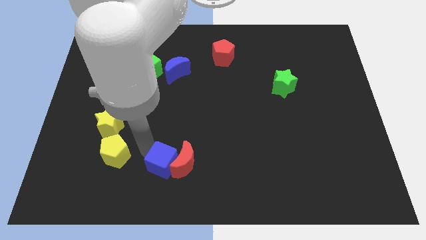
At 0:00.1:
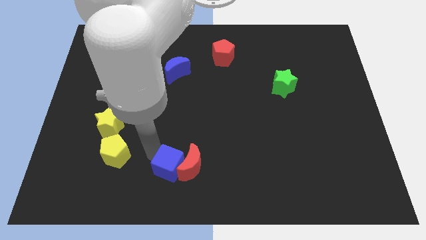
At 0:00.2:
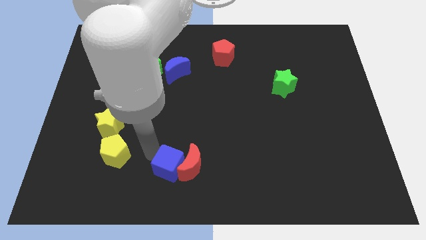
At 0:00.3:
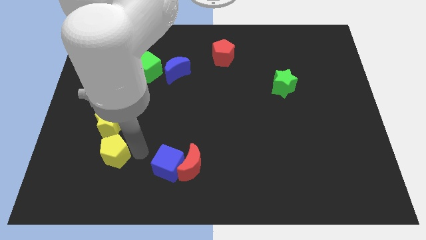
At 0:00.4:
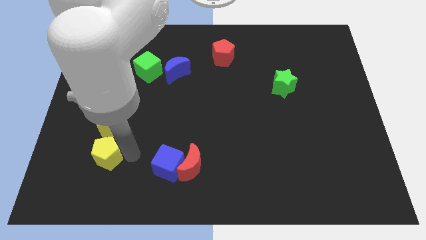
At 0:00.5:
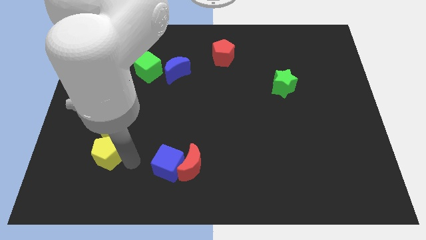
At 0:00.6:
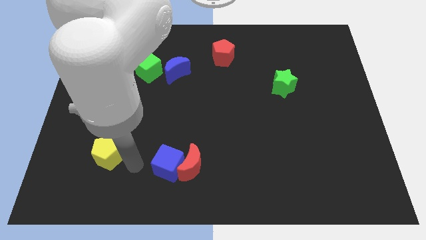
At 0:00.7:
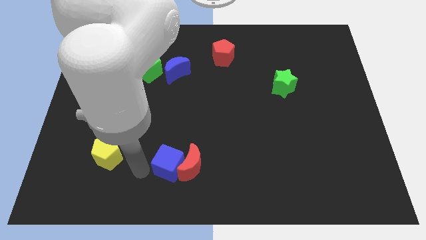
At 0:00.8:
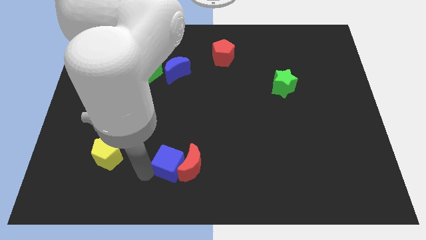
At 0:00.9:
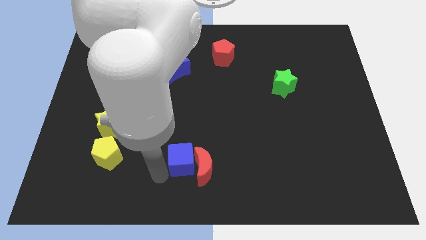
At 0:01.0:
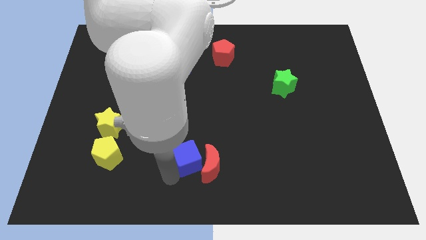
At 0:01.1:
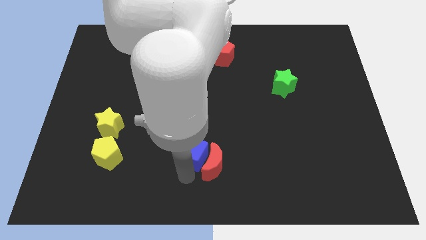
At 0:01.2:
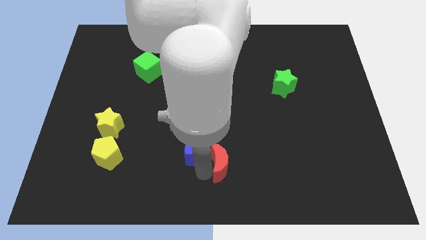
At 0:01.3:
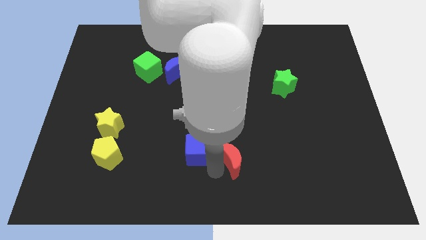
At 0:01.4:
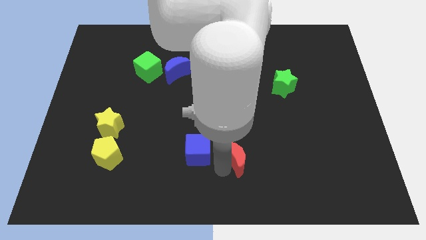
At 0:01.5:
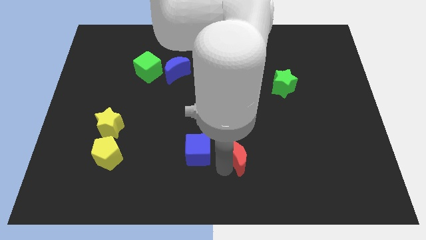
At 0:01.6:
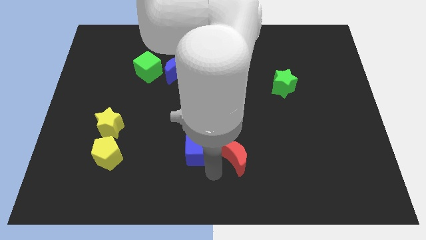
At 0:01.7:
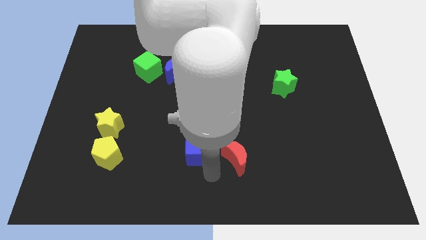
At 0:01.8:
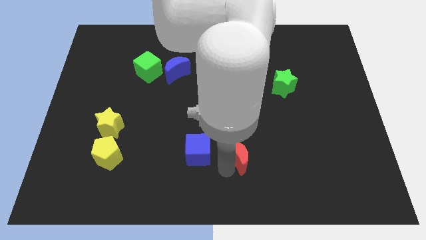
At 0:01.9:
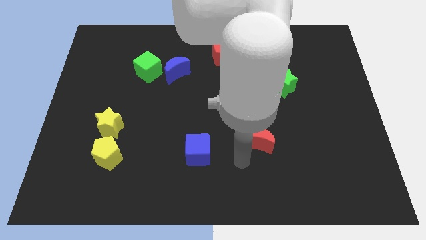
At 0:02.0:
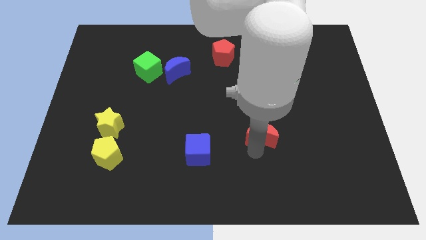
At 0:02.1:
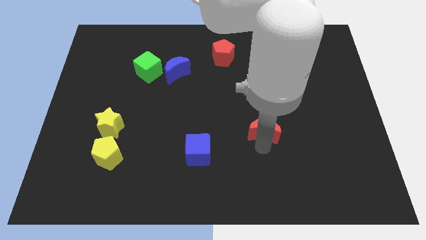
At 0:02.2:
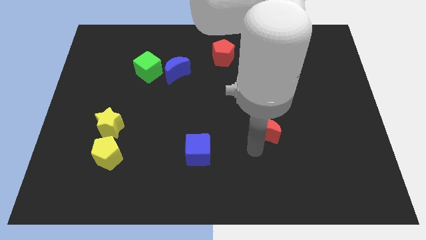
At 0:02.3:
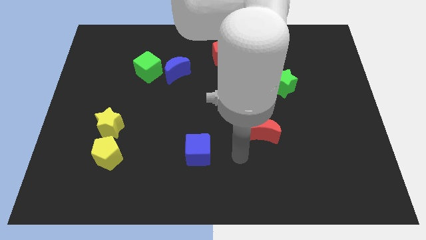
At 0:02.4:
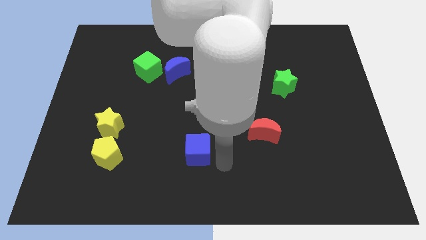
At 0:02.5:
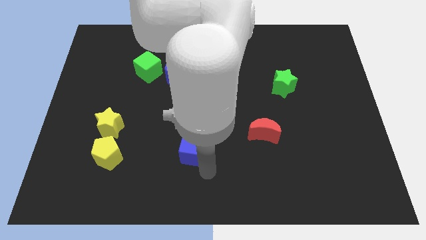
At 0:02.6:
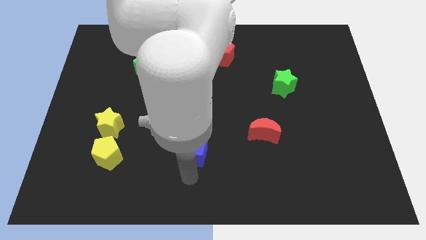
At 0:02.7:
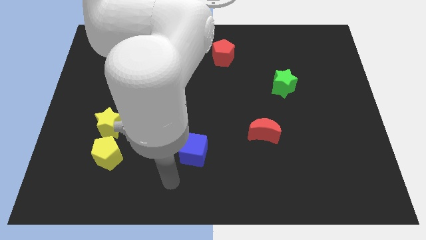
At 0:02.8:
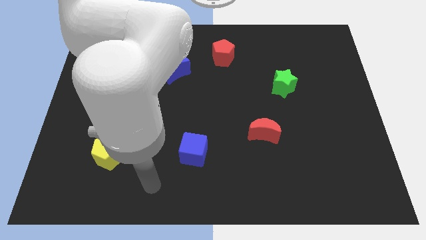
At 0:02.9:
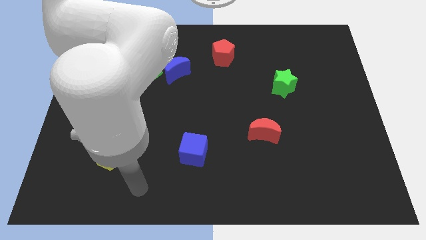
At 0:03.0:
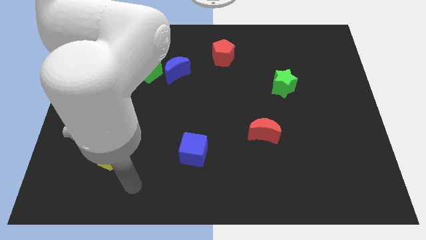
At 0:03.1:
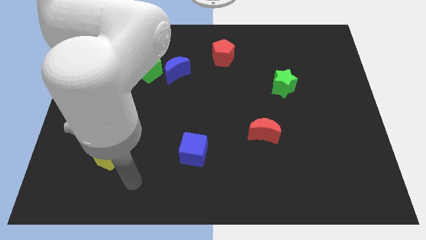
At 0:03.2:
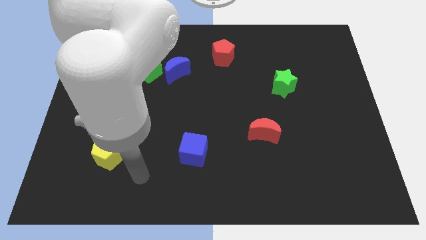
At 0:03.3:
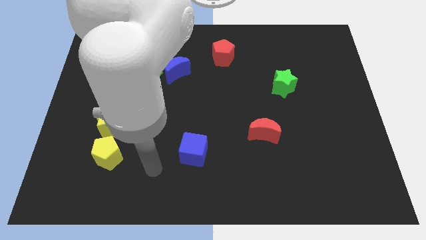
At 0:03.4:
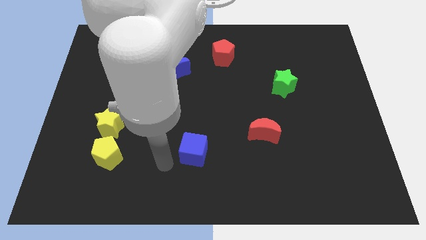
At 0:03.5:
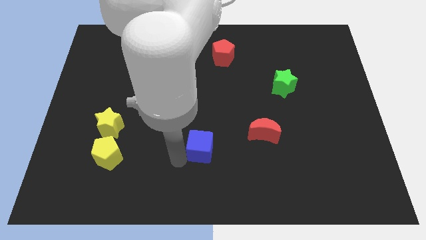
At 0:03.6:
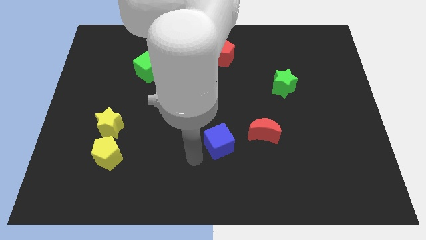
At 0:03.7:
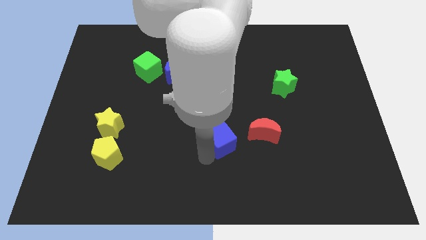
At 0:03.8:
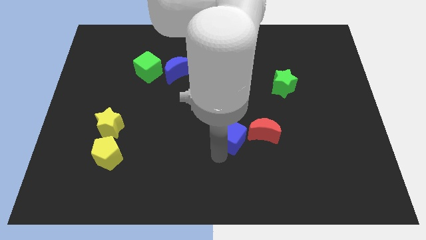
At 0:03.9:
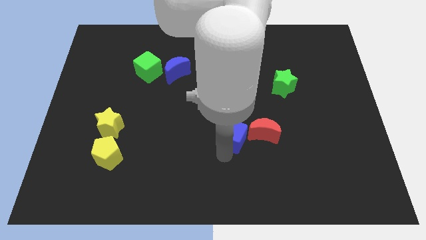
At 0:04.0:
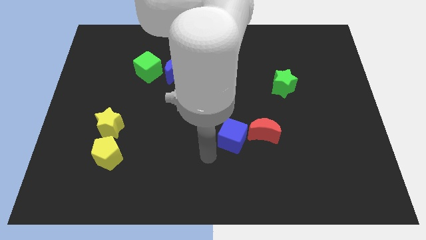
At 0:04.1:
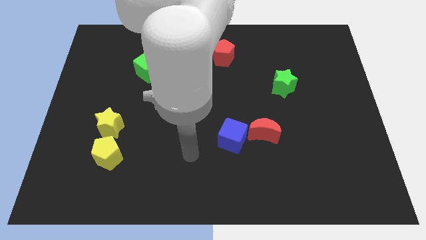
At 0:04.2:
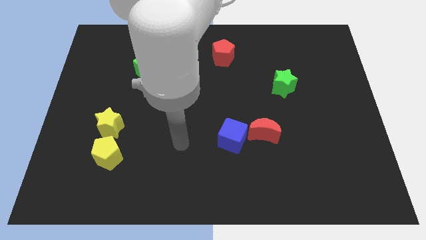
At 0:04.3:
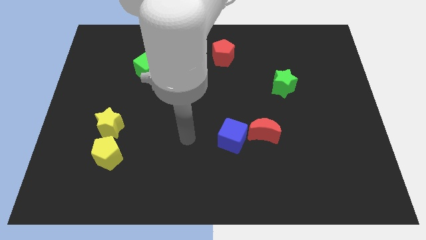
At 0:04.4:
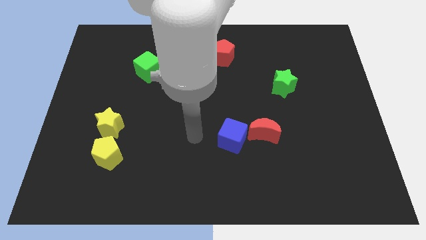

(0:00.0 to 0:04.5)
slide the blue cube and the red moon towards the right side of the board

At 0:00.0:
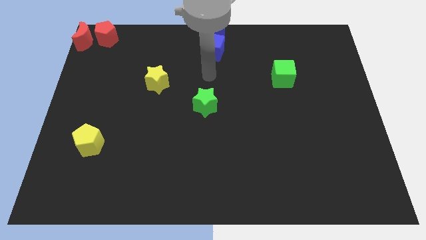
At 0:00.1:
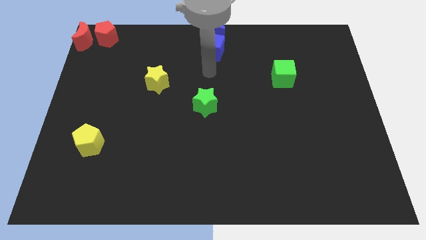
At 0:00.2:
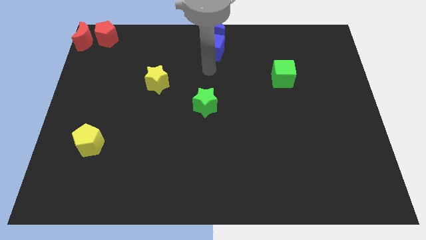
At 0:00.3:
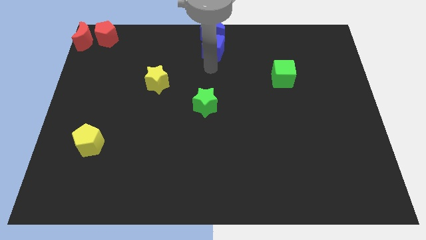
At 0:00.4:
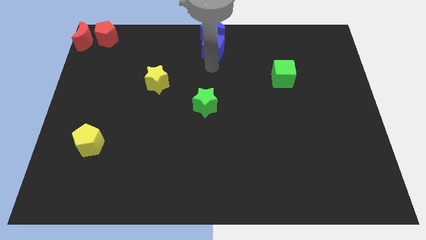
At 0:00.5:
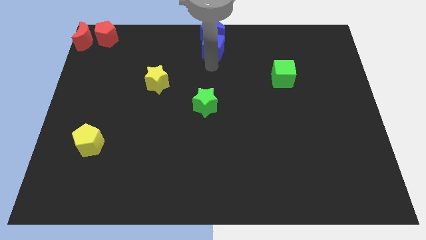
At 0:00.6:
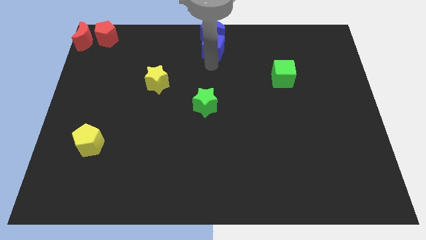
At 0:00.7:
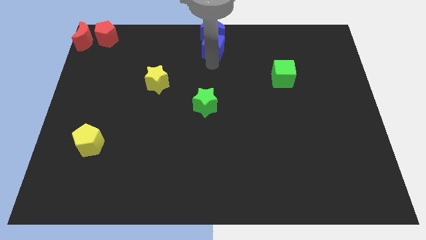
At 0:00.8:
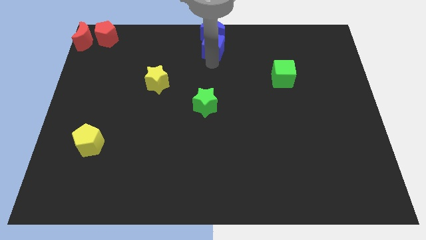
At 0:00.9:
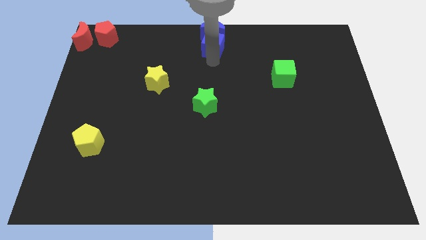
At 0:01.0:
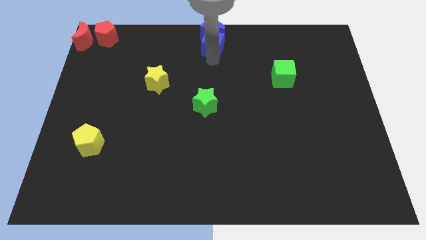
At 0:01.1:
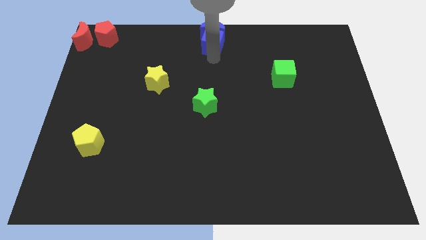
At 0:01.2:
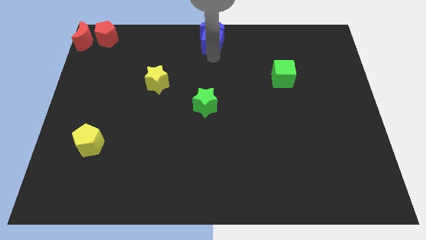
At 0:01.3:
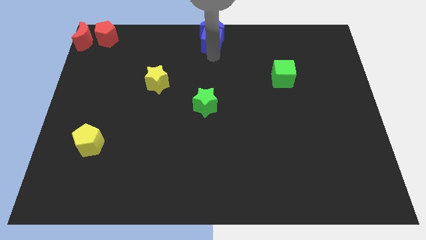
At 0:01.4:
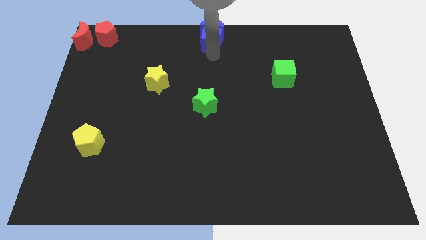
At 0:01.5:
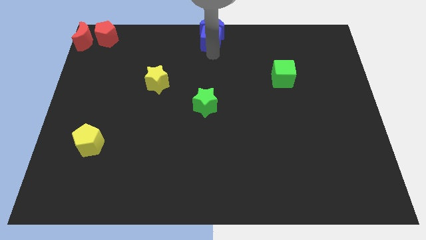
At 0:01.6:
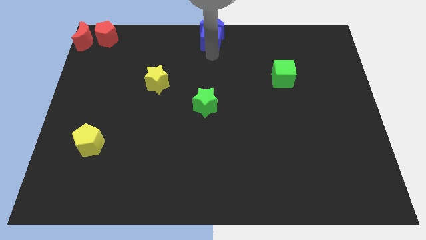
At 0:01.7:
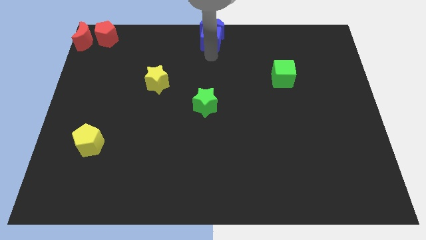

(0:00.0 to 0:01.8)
push the blue cube into the blue crescent

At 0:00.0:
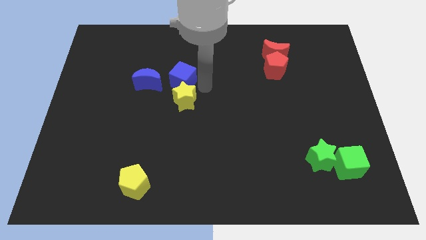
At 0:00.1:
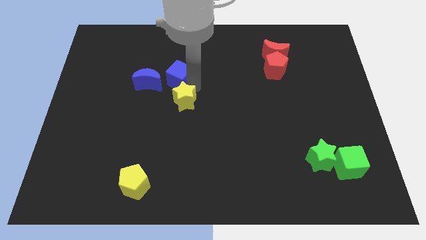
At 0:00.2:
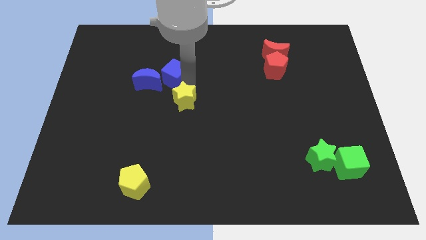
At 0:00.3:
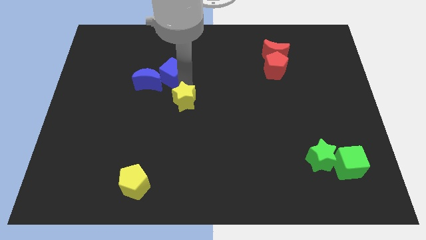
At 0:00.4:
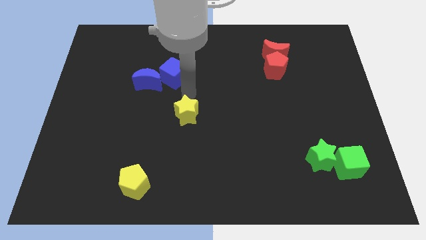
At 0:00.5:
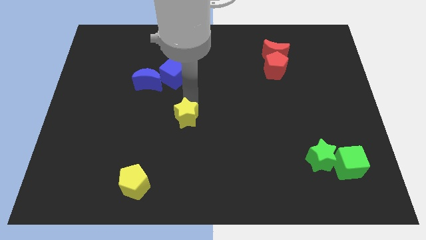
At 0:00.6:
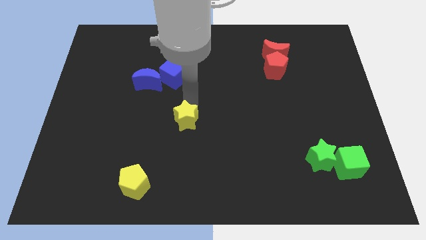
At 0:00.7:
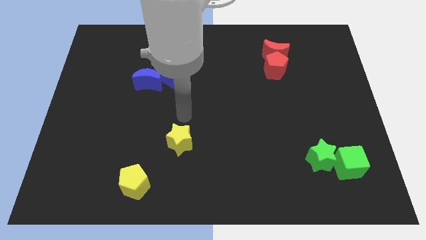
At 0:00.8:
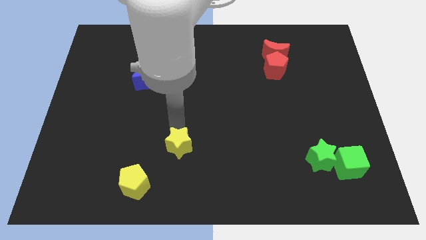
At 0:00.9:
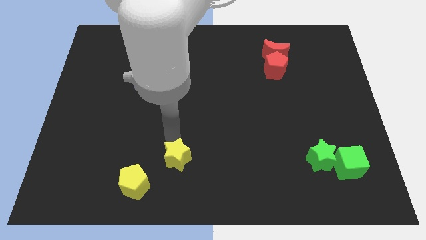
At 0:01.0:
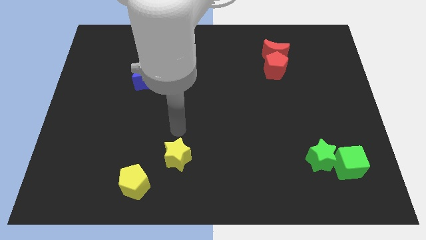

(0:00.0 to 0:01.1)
push the yellow star towards the yellow pentagon

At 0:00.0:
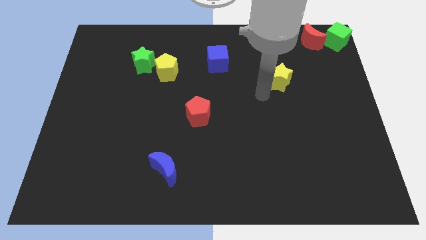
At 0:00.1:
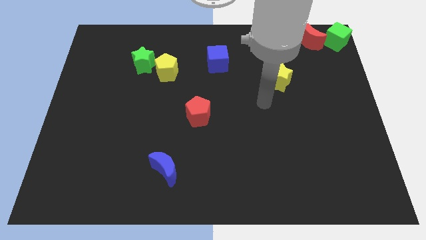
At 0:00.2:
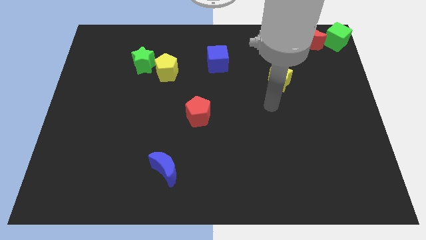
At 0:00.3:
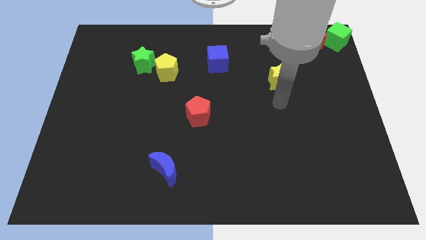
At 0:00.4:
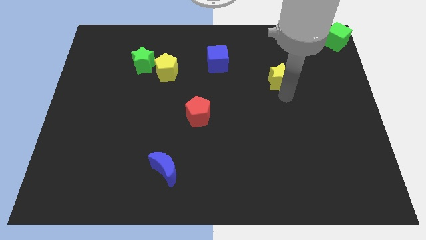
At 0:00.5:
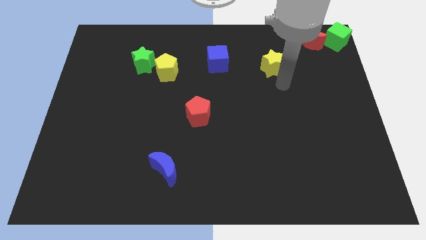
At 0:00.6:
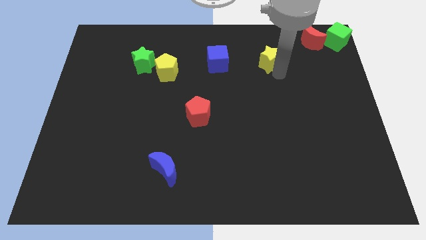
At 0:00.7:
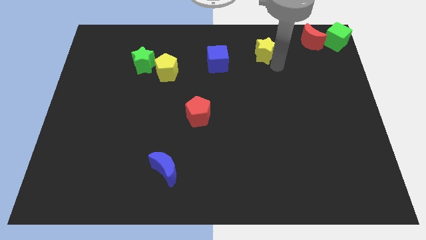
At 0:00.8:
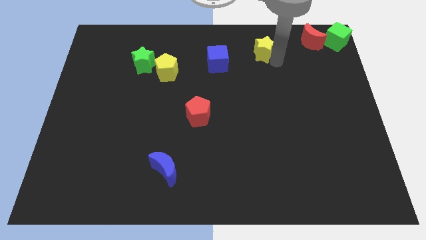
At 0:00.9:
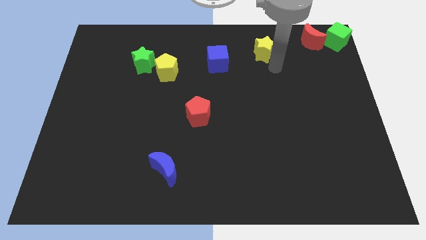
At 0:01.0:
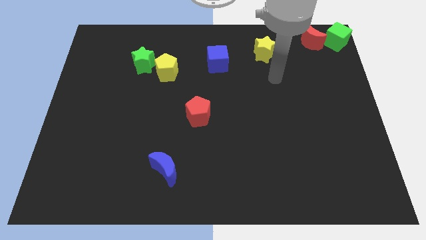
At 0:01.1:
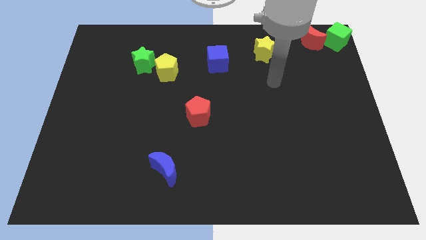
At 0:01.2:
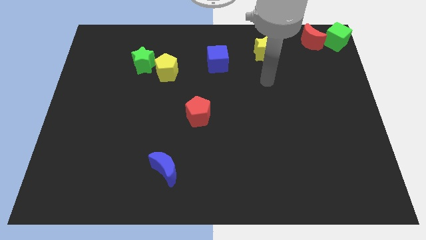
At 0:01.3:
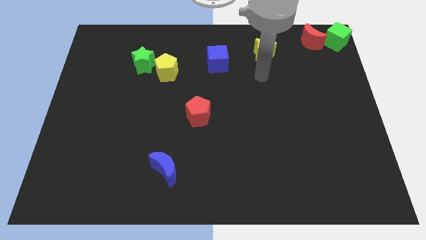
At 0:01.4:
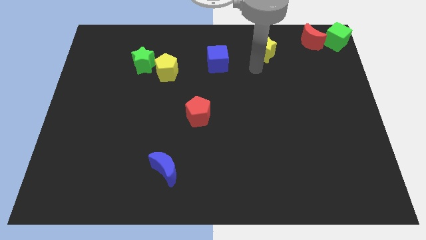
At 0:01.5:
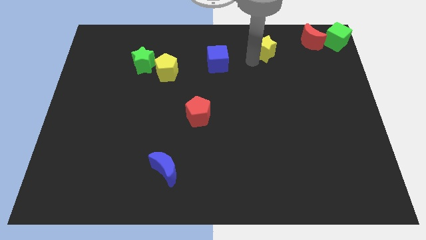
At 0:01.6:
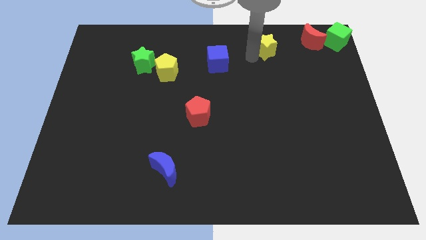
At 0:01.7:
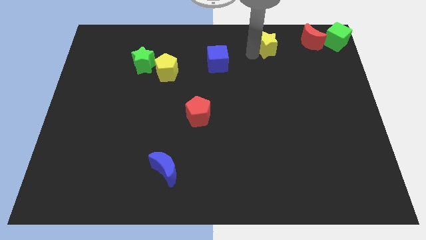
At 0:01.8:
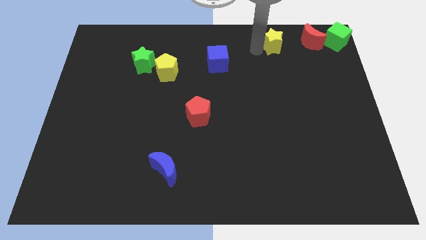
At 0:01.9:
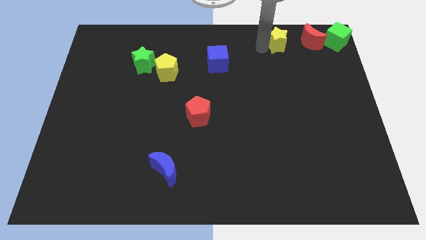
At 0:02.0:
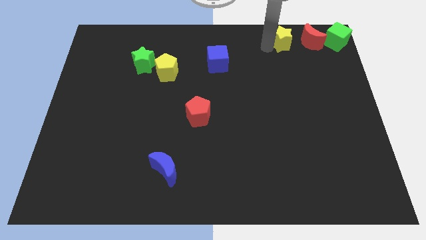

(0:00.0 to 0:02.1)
move the yellow star to the left of the red crescent
